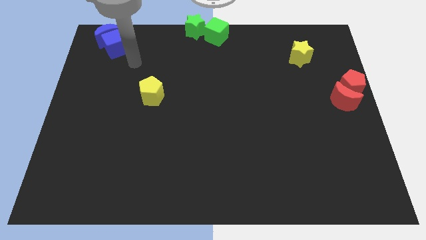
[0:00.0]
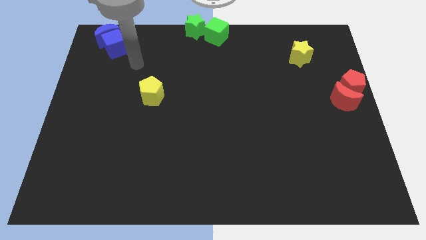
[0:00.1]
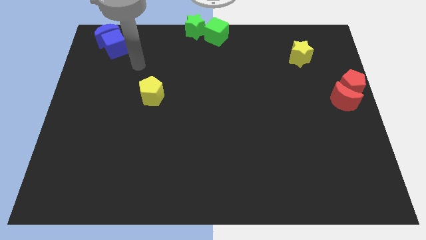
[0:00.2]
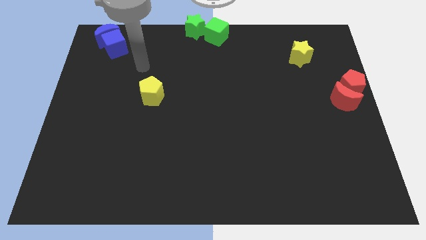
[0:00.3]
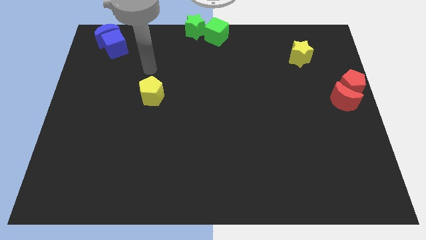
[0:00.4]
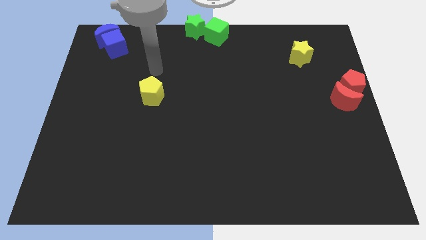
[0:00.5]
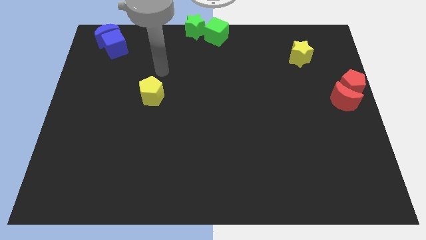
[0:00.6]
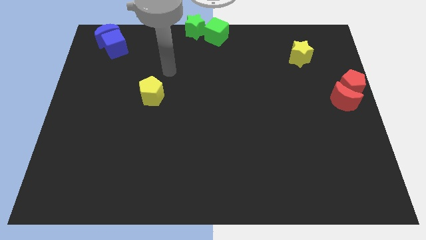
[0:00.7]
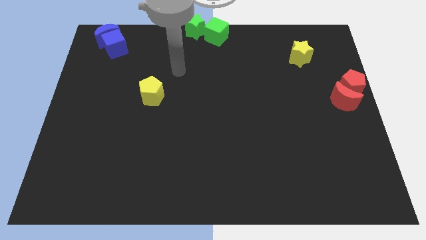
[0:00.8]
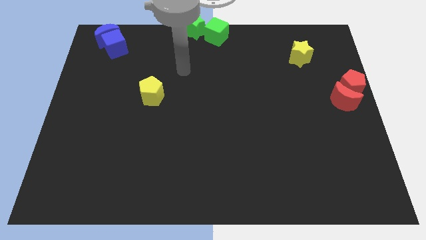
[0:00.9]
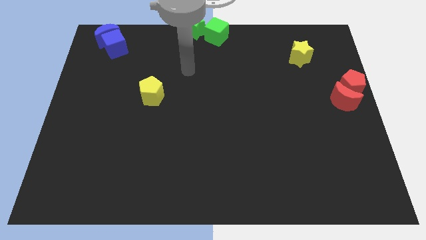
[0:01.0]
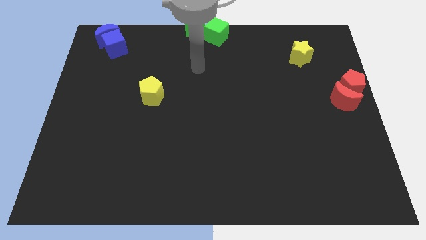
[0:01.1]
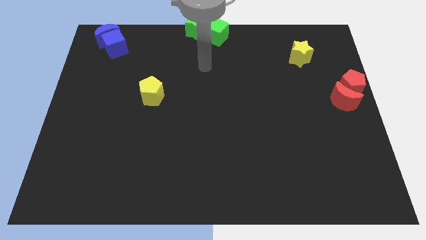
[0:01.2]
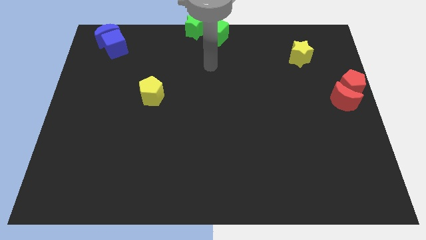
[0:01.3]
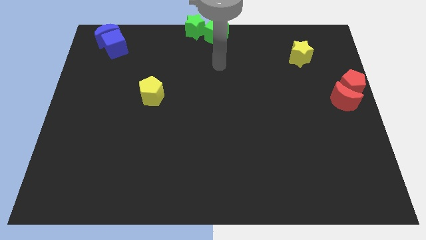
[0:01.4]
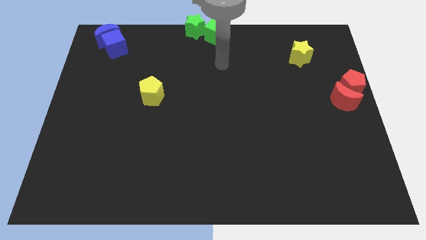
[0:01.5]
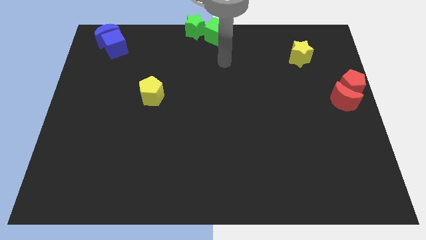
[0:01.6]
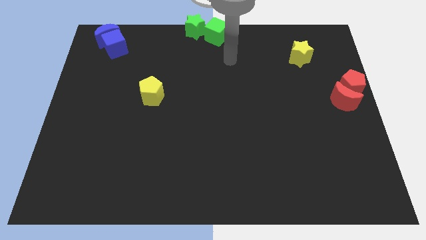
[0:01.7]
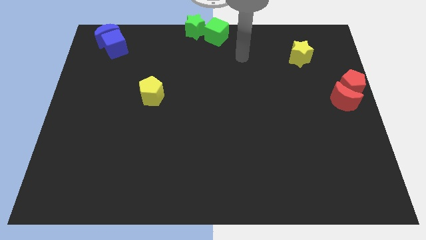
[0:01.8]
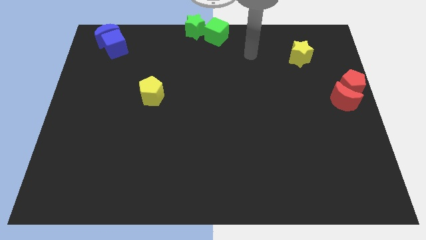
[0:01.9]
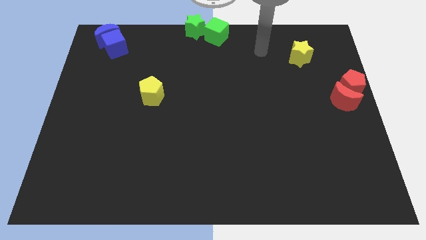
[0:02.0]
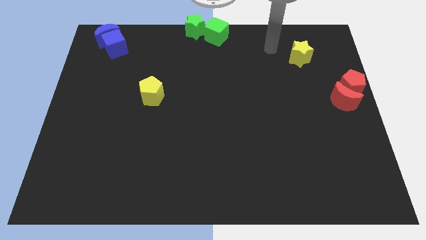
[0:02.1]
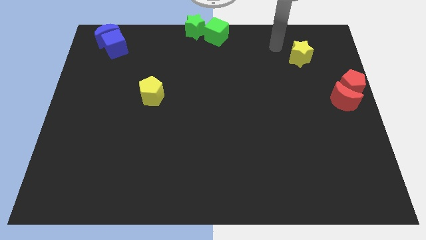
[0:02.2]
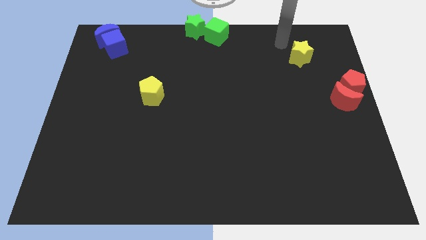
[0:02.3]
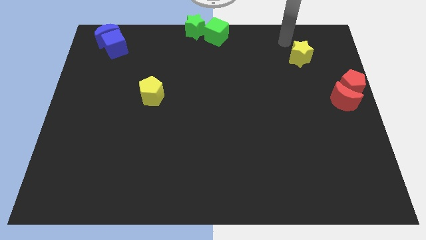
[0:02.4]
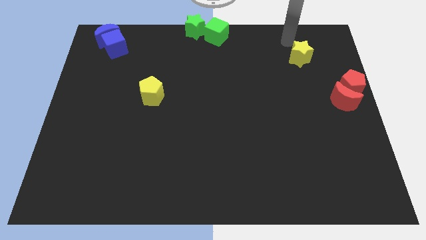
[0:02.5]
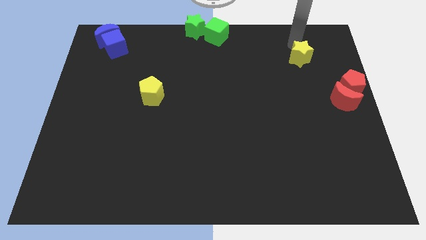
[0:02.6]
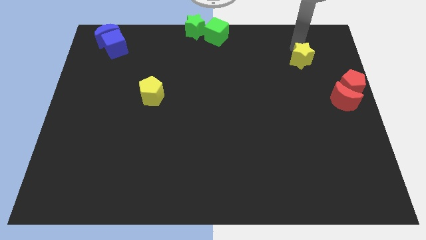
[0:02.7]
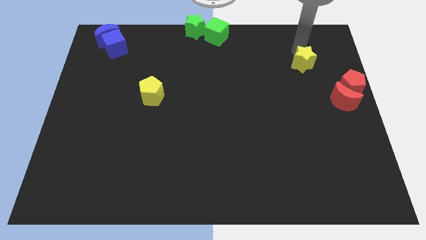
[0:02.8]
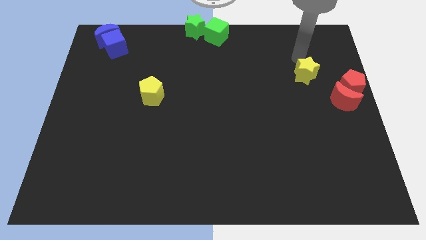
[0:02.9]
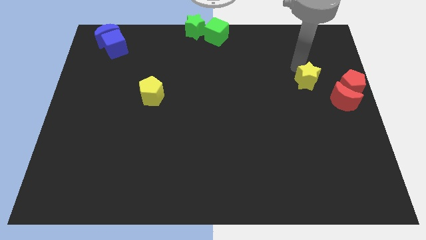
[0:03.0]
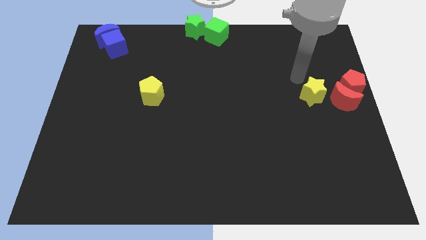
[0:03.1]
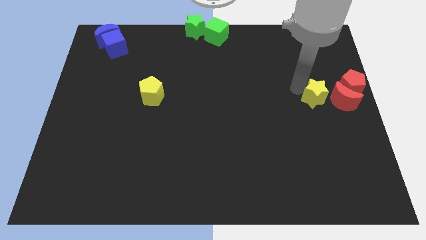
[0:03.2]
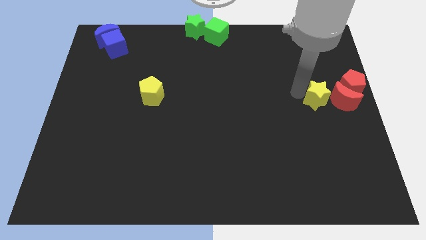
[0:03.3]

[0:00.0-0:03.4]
move the yellow star to the left of the red crescent

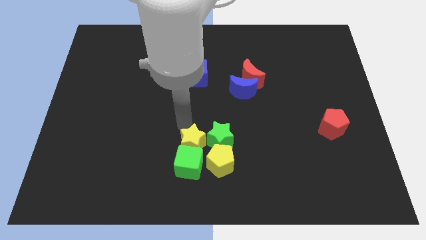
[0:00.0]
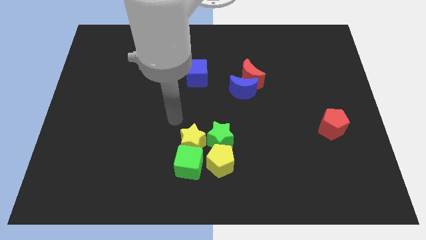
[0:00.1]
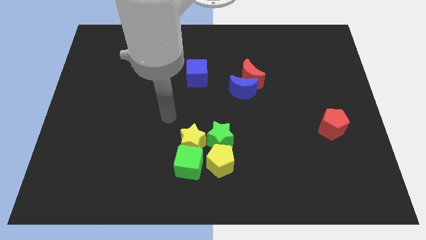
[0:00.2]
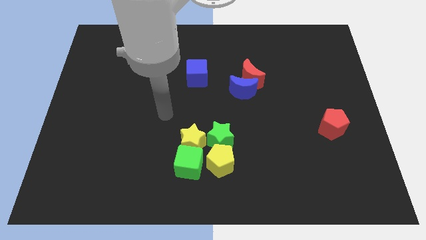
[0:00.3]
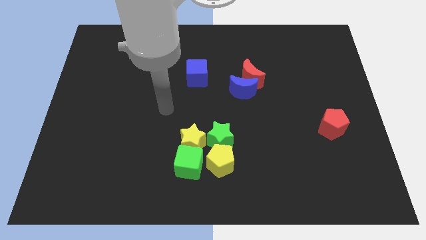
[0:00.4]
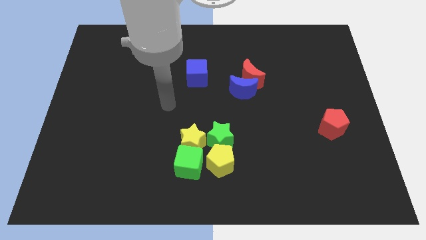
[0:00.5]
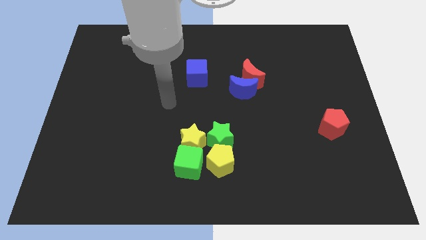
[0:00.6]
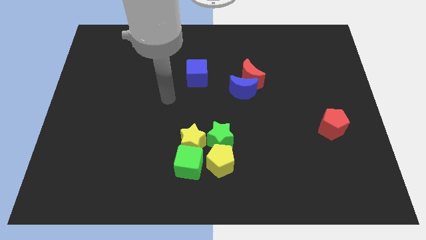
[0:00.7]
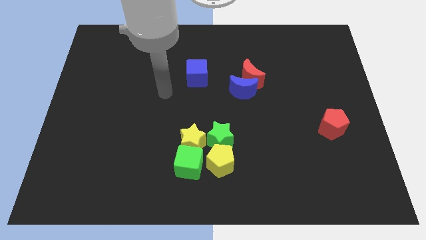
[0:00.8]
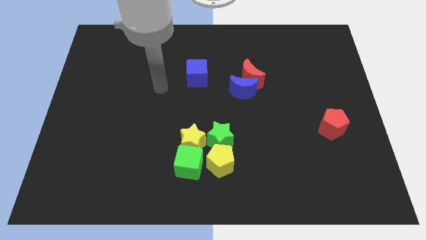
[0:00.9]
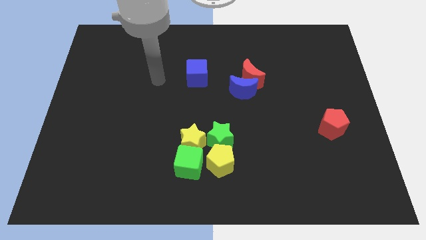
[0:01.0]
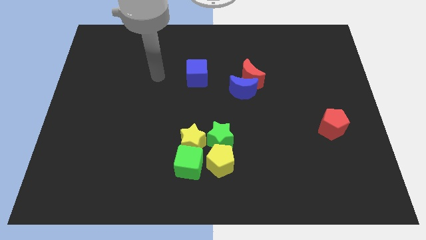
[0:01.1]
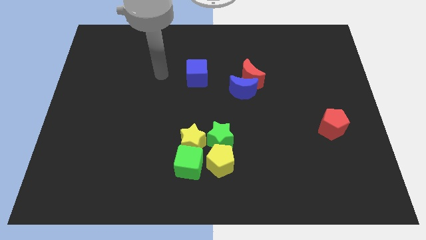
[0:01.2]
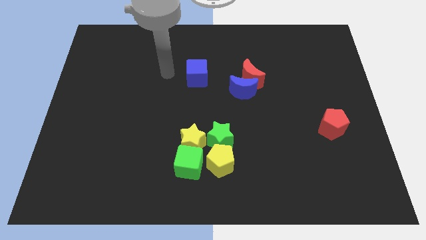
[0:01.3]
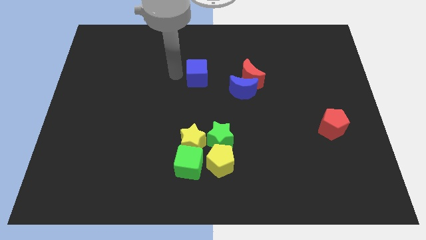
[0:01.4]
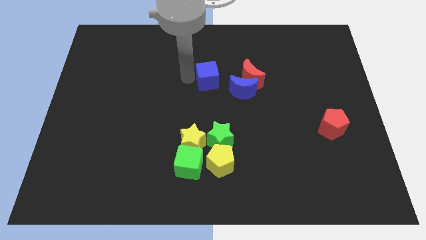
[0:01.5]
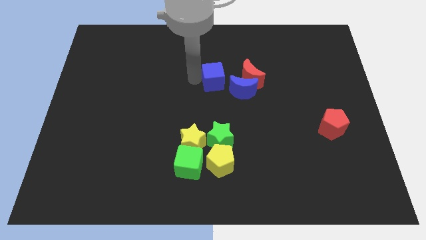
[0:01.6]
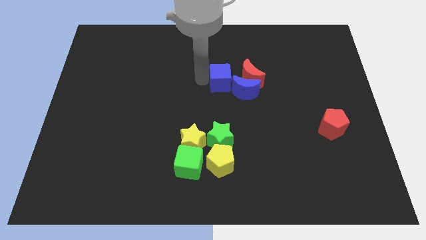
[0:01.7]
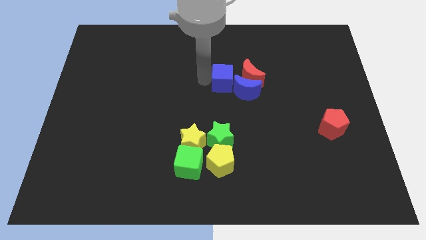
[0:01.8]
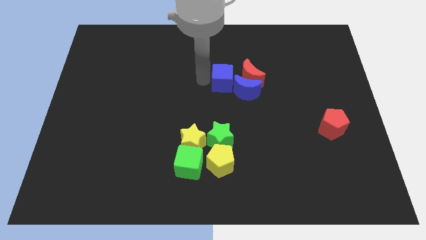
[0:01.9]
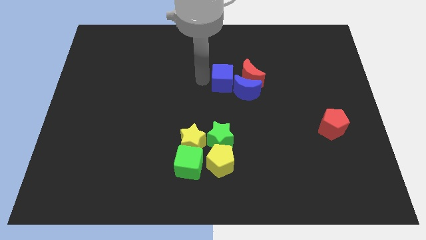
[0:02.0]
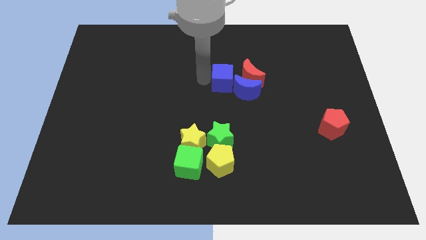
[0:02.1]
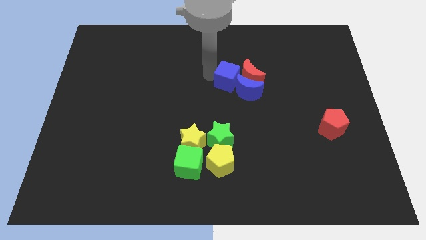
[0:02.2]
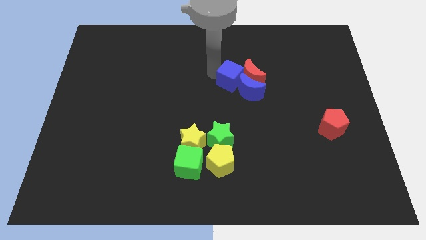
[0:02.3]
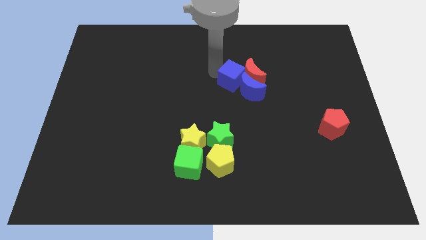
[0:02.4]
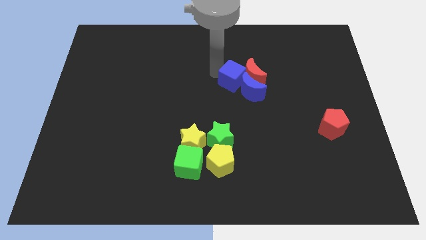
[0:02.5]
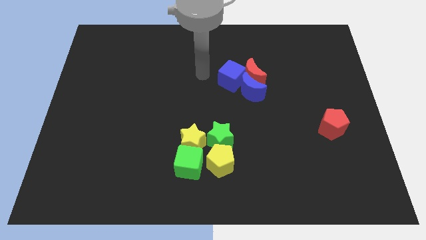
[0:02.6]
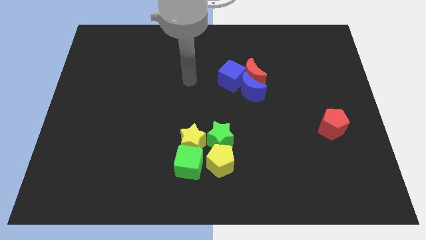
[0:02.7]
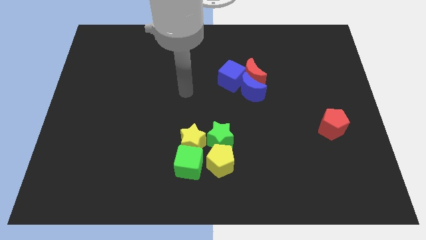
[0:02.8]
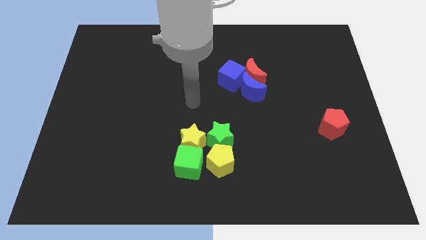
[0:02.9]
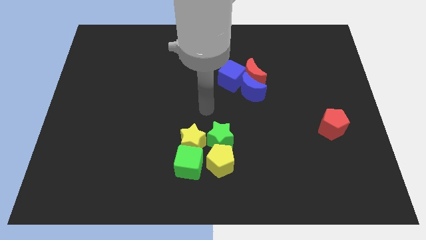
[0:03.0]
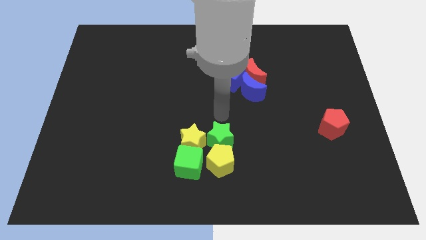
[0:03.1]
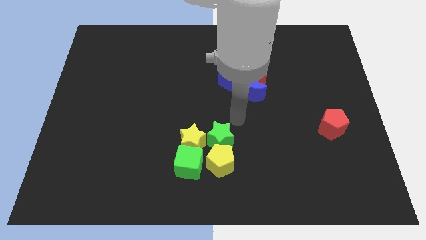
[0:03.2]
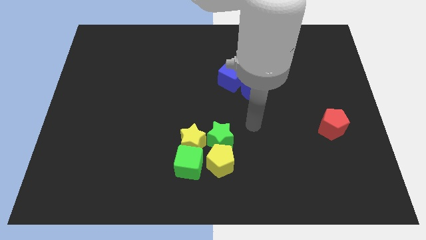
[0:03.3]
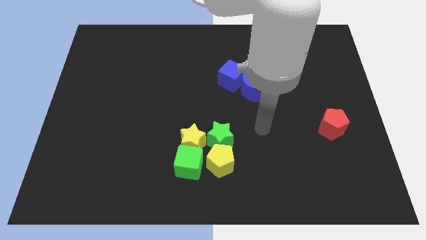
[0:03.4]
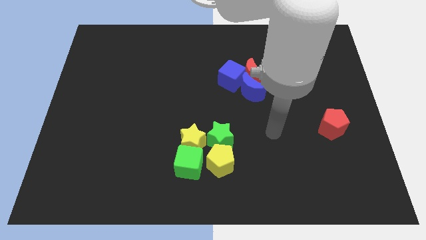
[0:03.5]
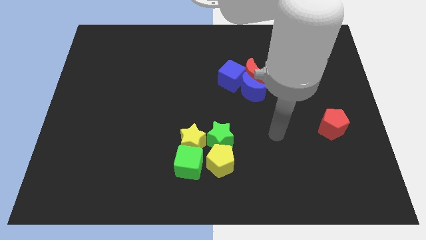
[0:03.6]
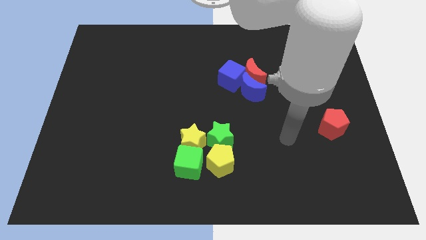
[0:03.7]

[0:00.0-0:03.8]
push the blue cube into the left of the blue crescent

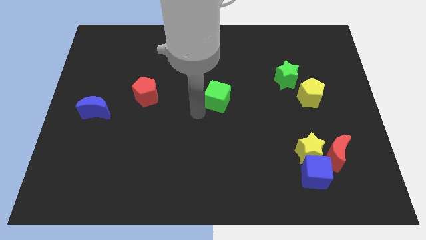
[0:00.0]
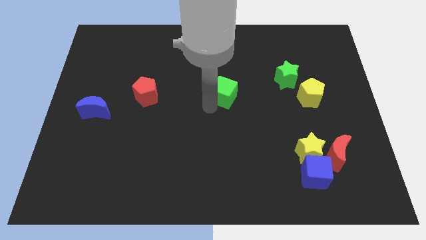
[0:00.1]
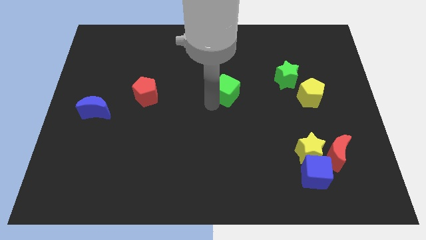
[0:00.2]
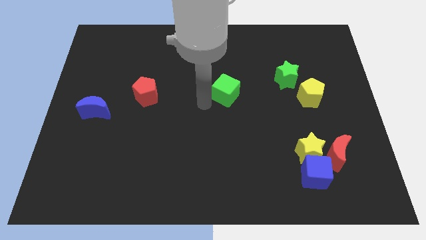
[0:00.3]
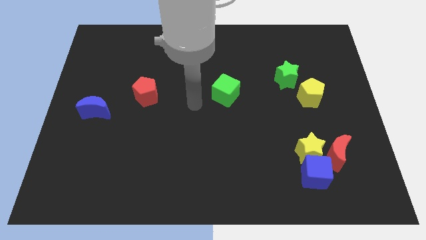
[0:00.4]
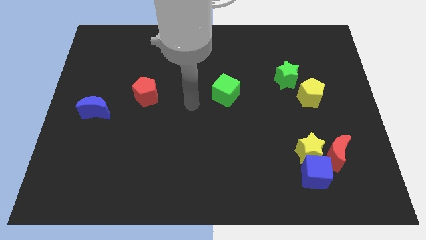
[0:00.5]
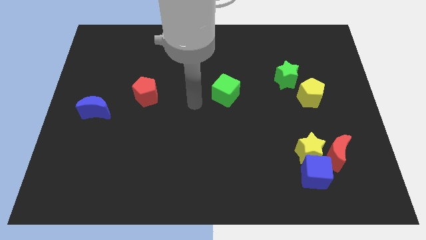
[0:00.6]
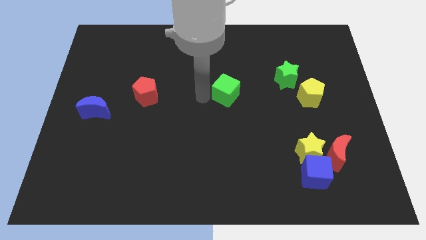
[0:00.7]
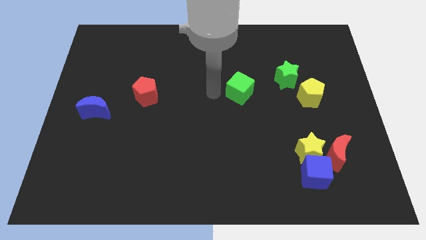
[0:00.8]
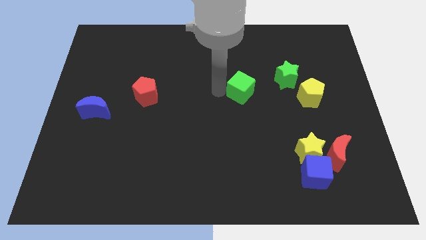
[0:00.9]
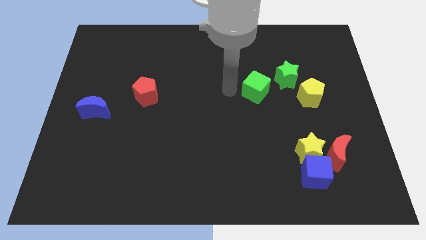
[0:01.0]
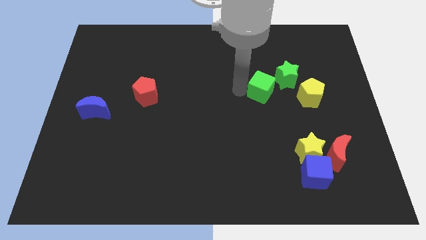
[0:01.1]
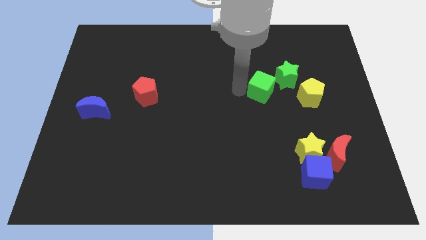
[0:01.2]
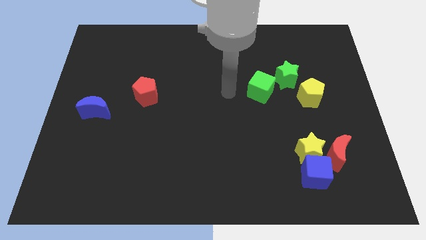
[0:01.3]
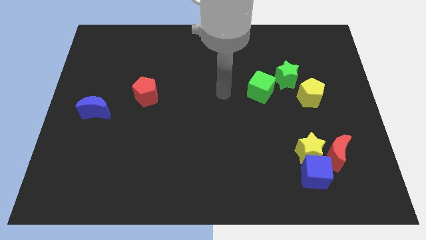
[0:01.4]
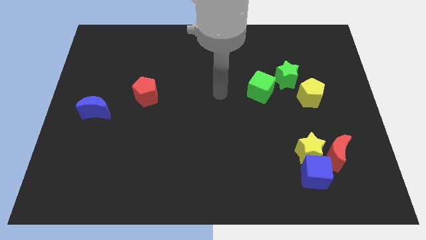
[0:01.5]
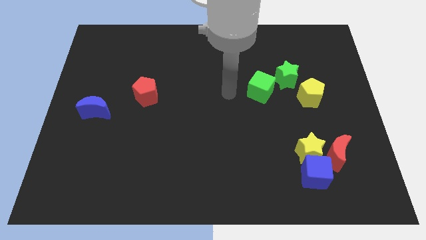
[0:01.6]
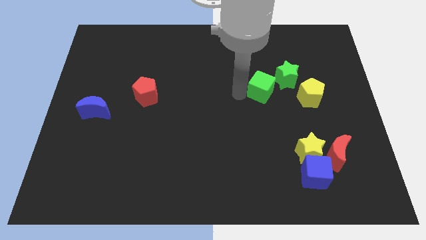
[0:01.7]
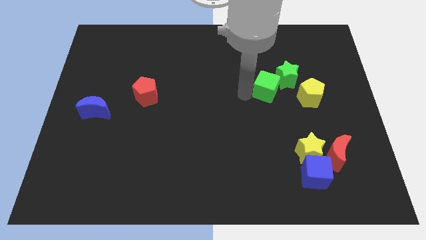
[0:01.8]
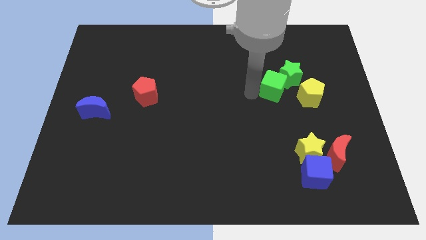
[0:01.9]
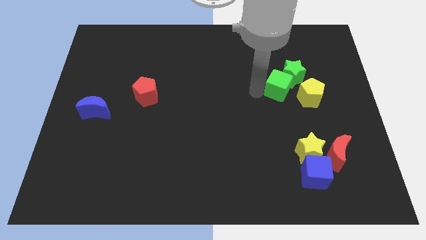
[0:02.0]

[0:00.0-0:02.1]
push the green cube near to the green star
